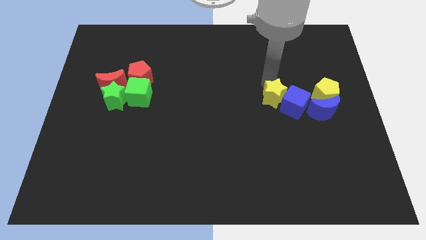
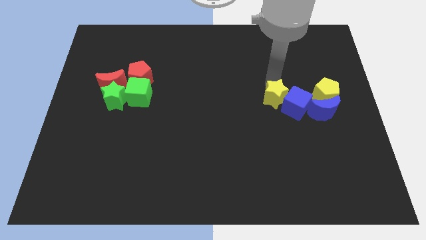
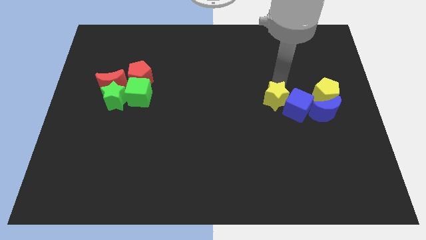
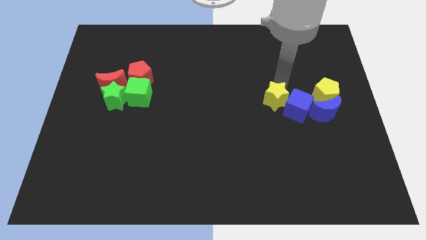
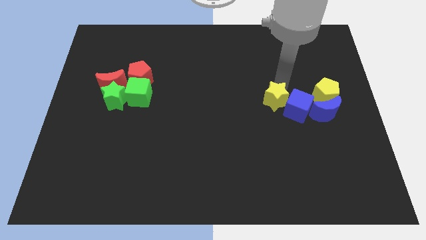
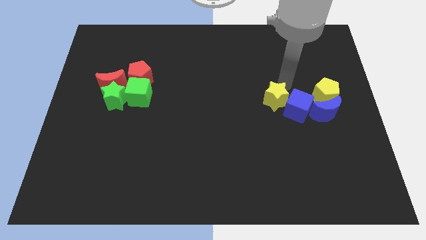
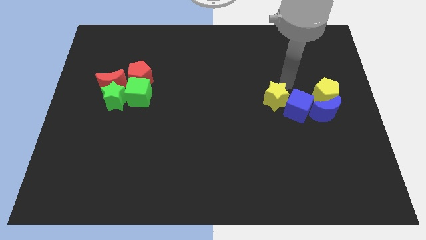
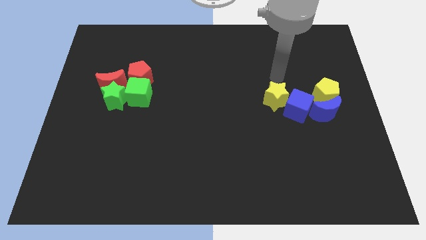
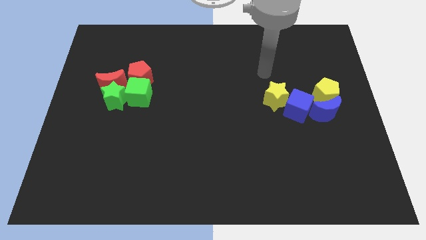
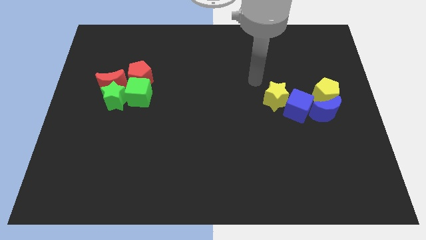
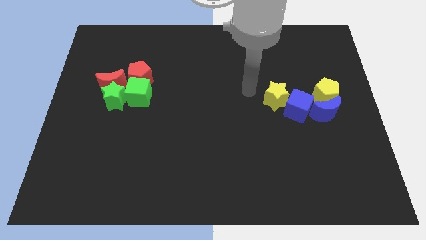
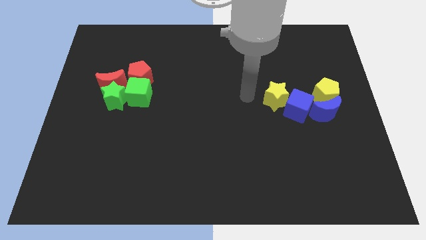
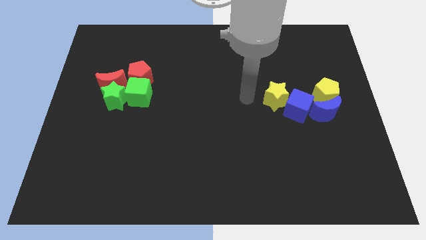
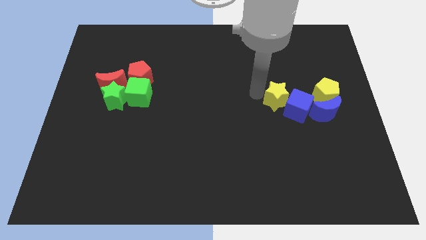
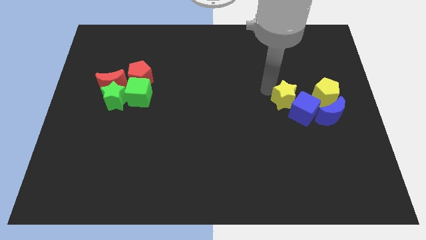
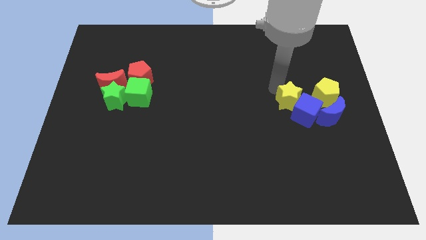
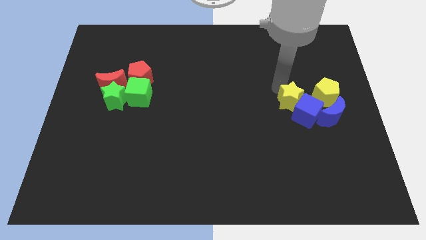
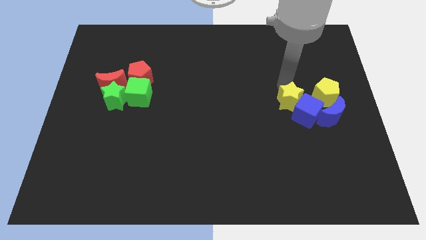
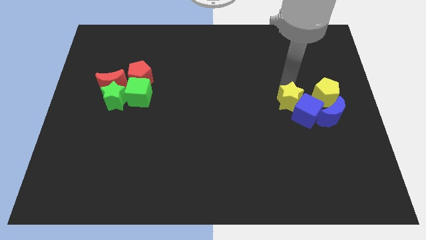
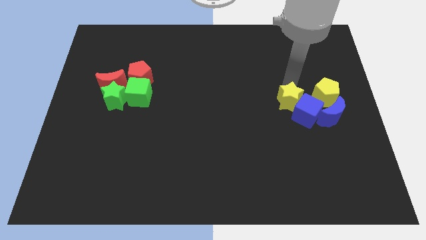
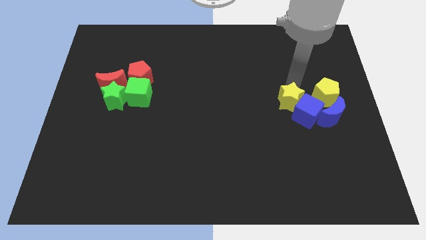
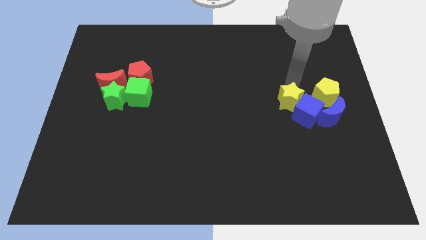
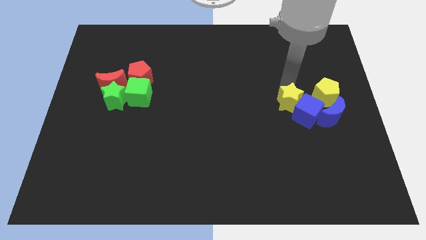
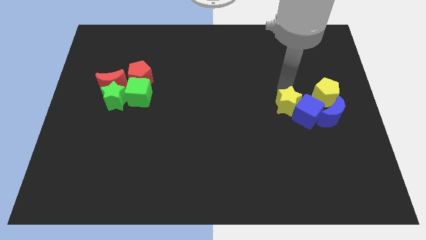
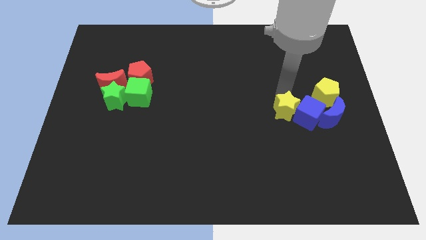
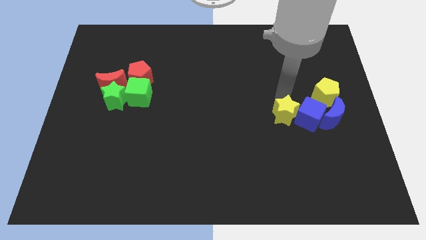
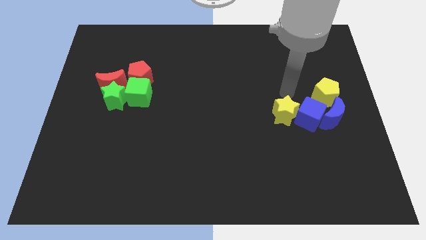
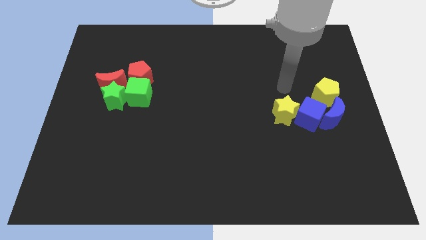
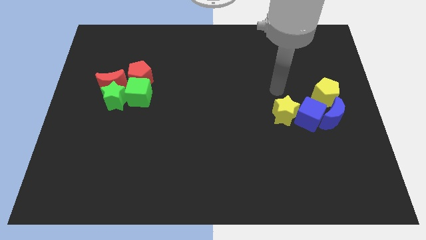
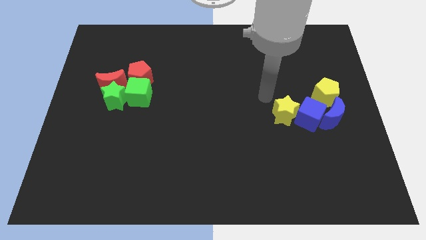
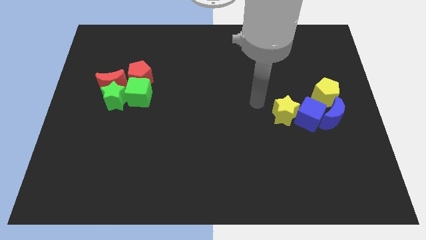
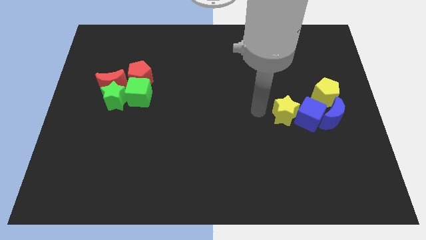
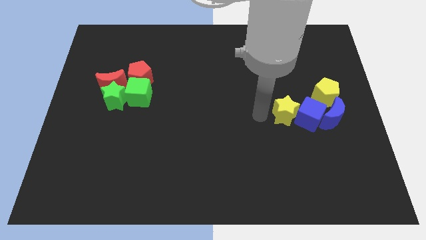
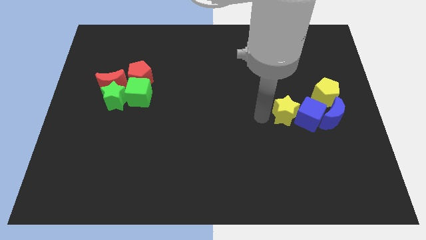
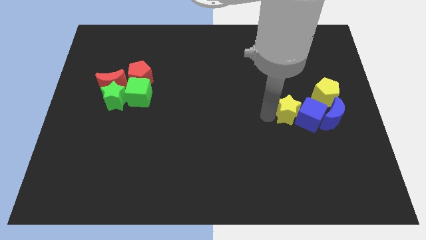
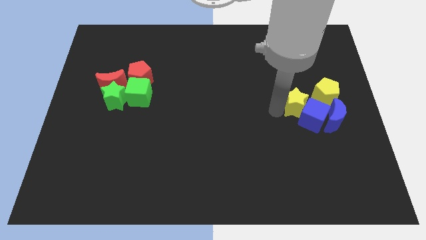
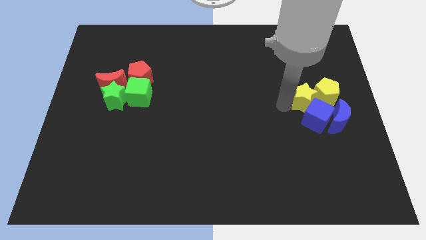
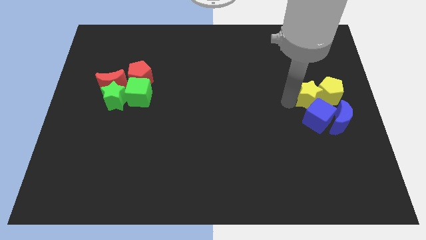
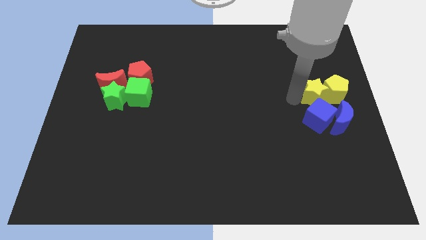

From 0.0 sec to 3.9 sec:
place yellow star to the left of yellow pentagon

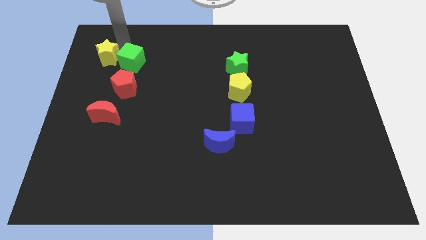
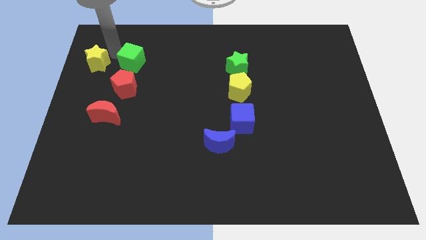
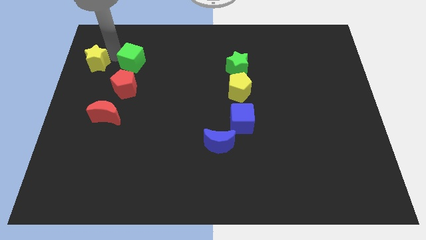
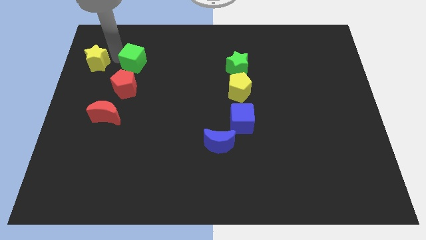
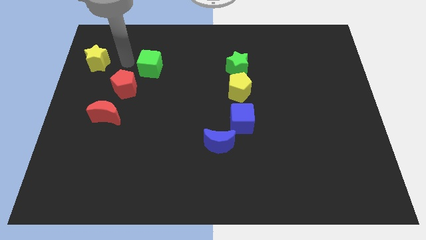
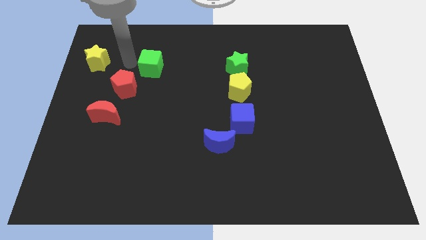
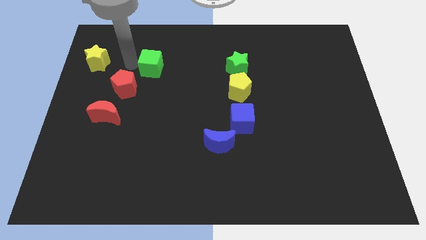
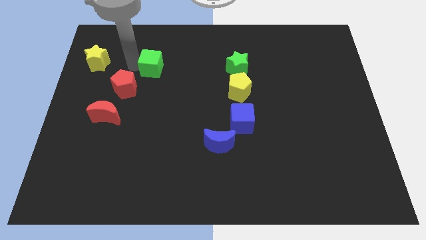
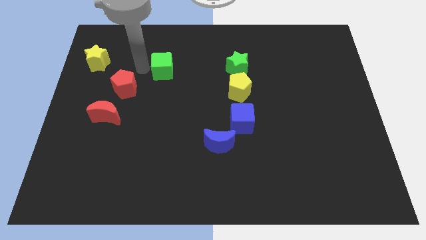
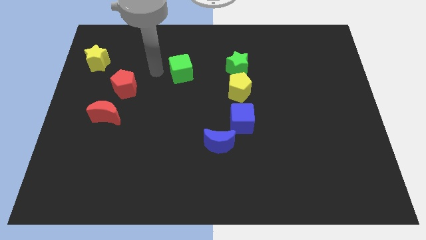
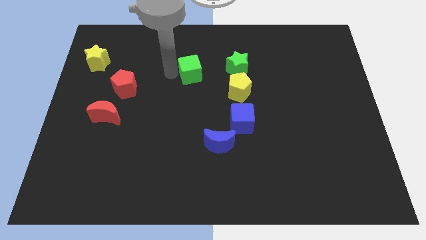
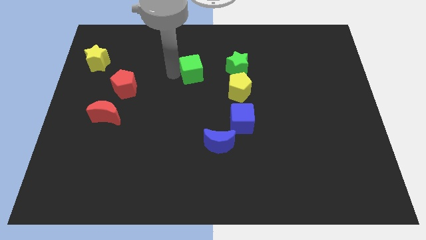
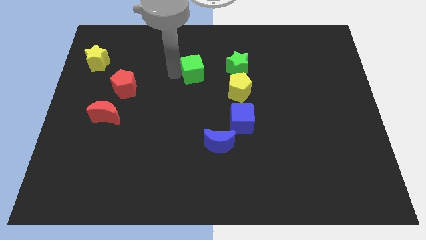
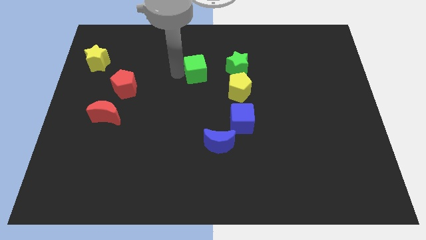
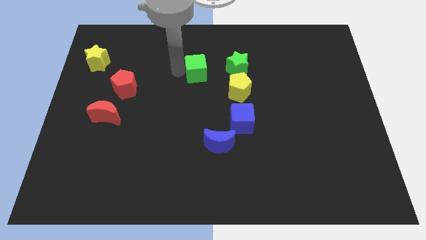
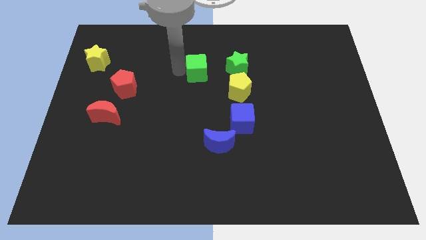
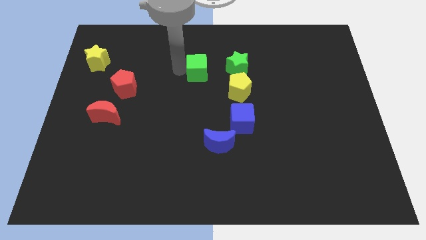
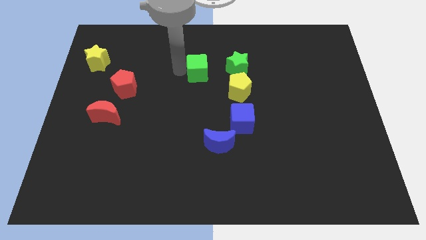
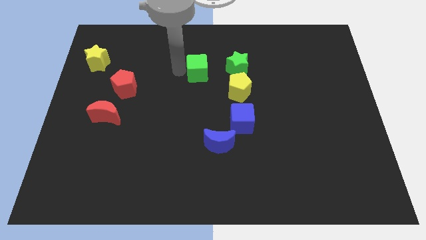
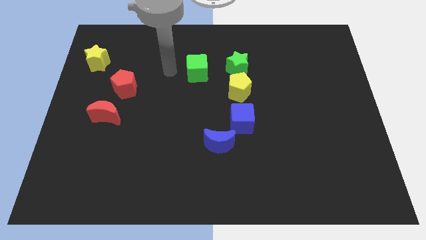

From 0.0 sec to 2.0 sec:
move the green cube left to the green star

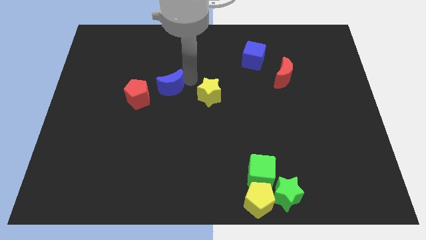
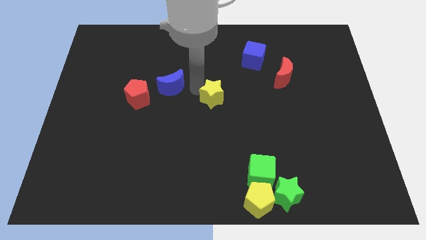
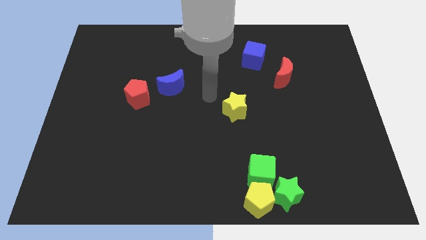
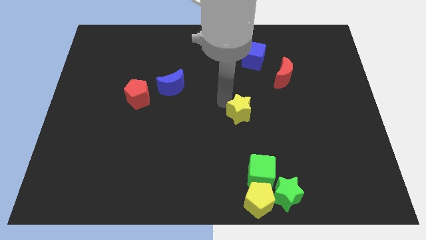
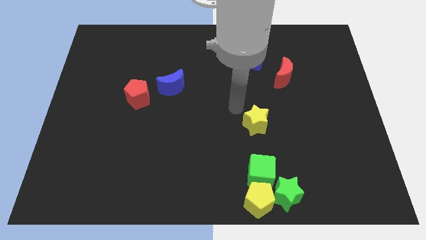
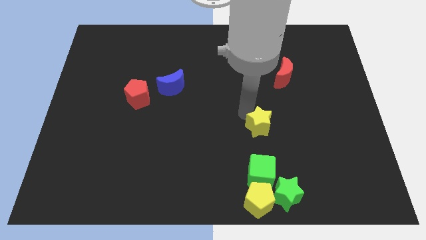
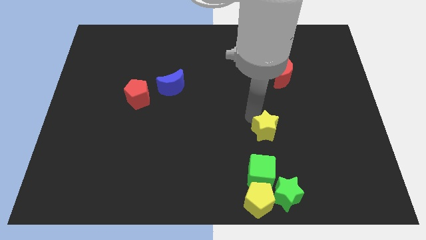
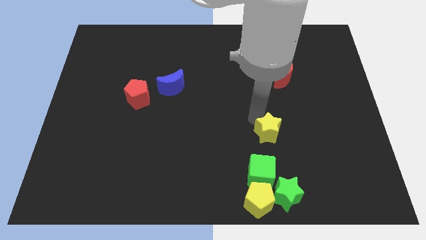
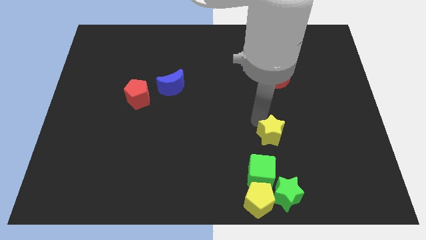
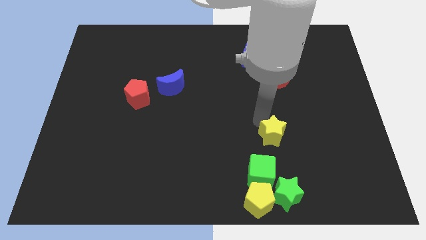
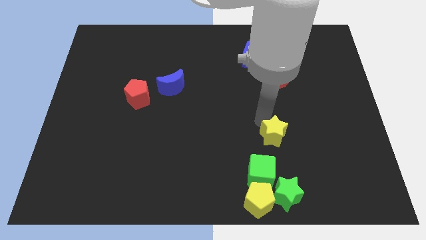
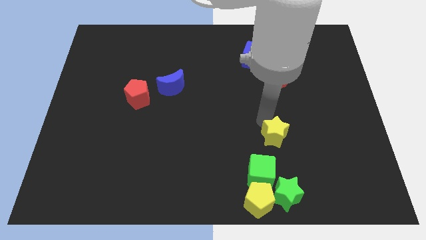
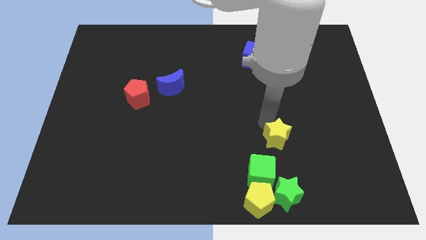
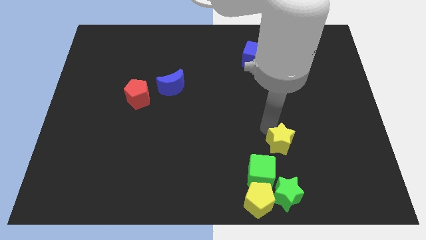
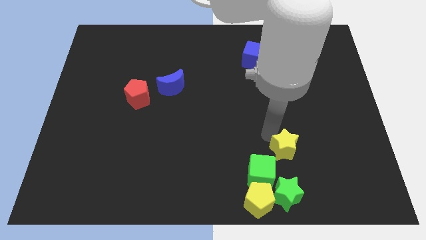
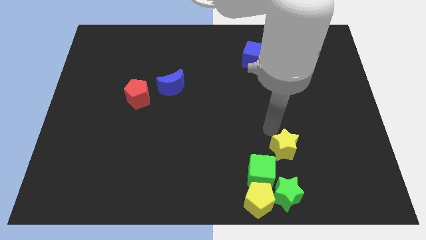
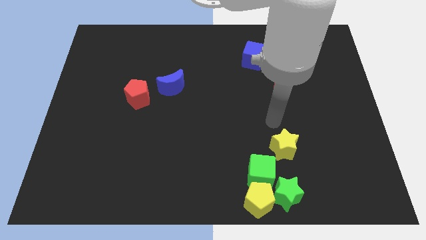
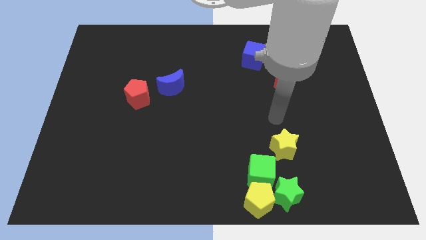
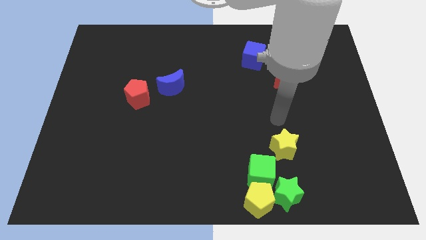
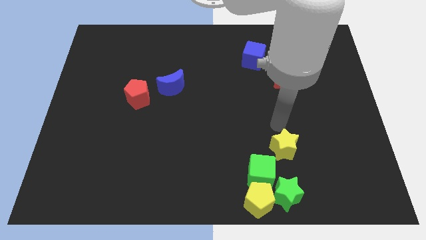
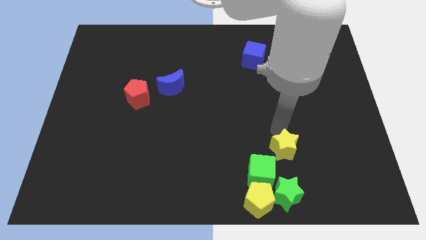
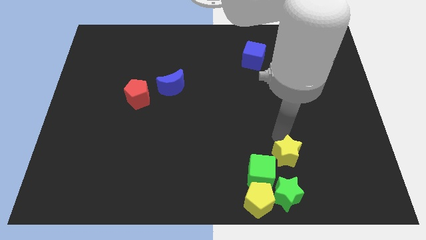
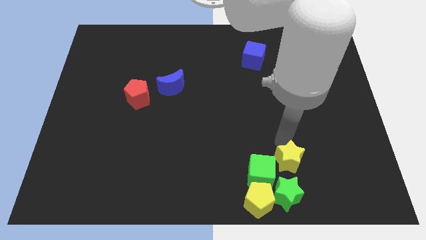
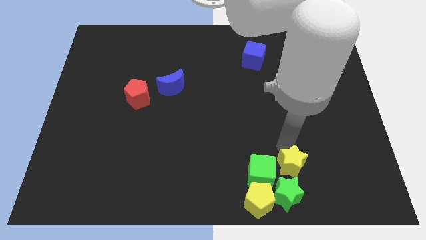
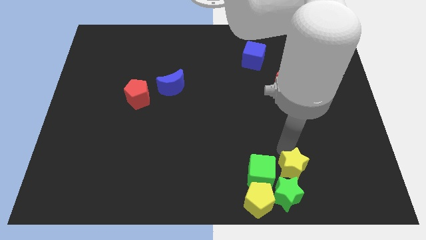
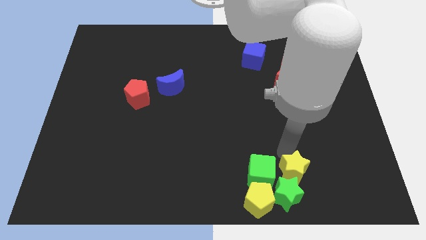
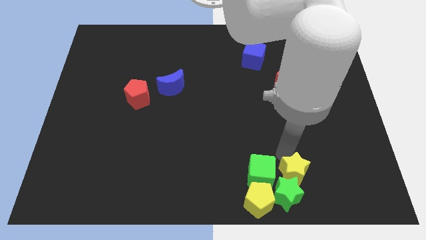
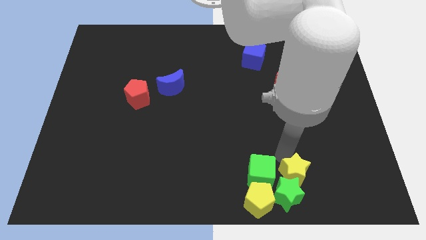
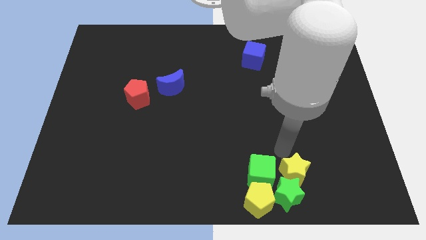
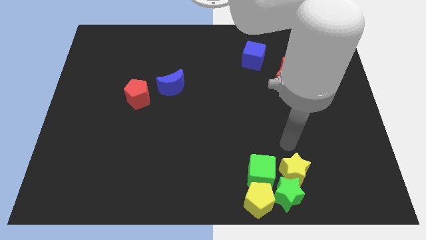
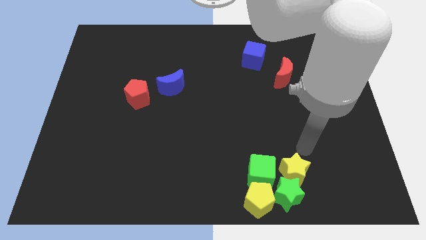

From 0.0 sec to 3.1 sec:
move the yellow star to the right of the green cube
